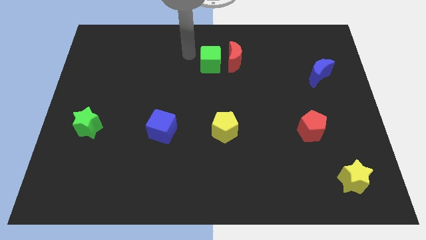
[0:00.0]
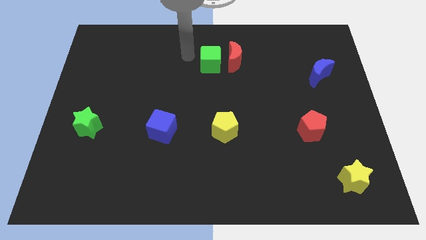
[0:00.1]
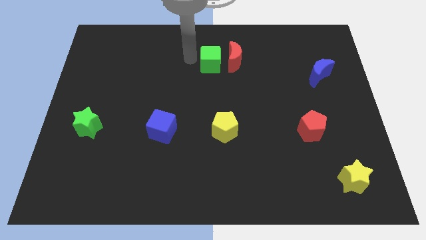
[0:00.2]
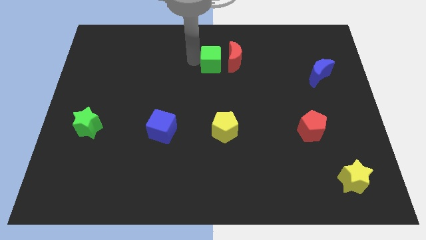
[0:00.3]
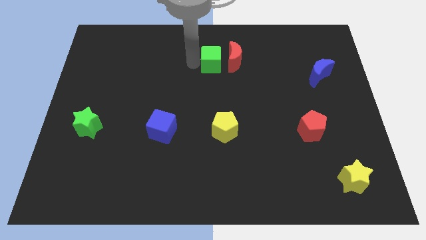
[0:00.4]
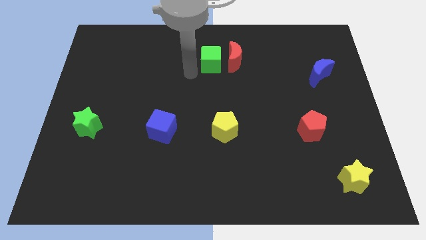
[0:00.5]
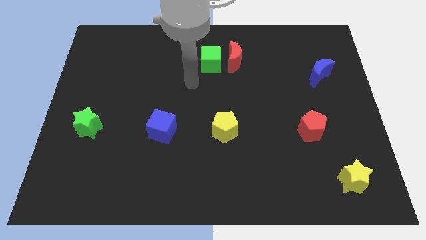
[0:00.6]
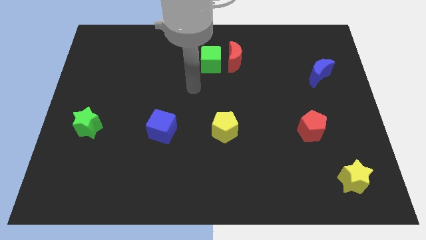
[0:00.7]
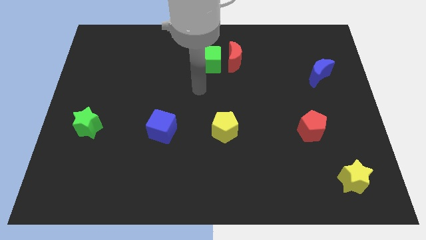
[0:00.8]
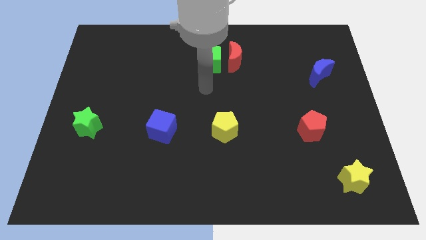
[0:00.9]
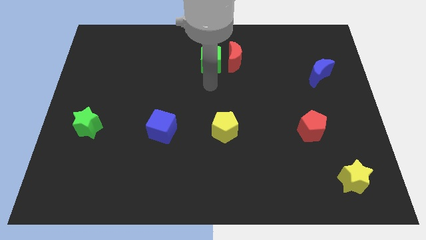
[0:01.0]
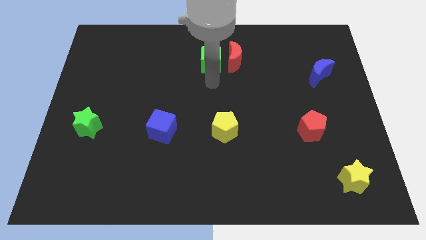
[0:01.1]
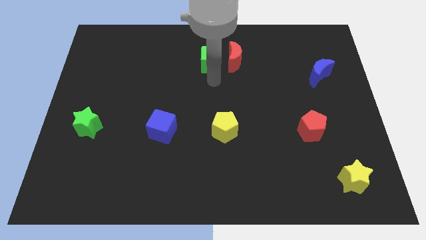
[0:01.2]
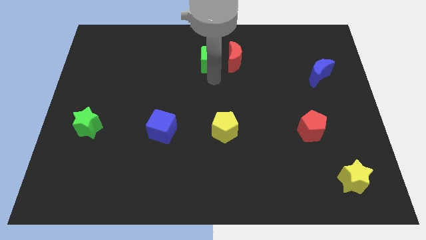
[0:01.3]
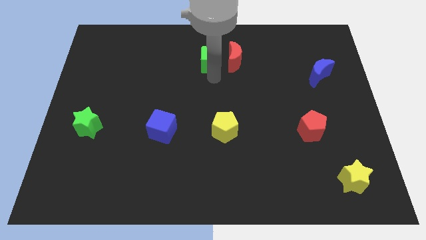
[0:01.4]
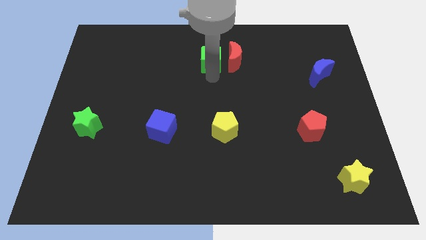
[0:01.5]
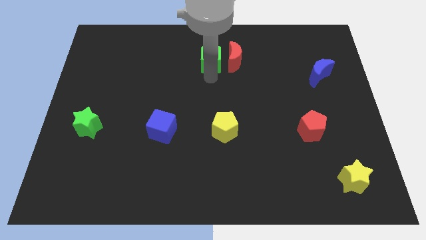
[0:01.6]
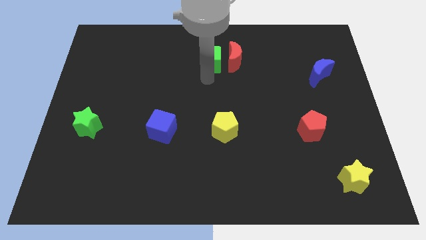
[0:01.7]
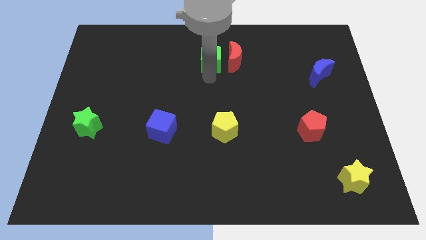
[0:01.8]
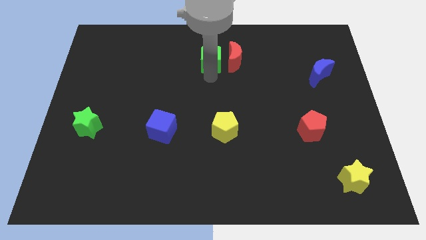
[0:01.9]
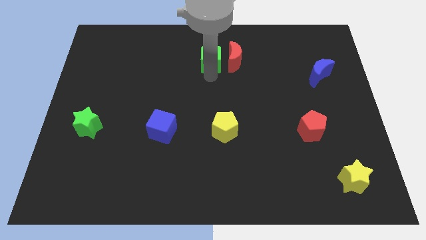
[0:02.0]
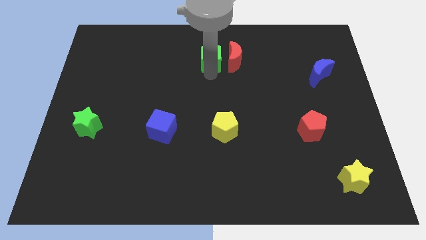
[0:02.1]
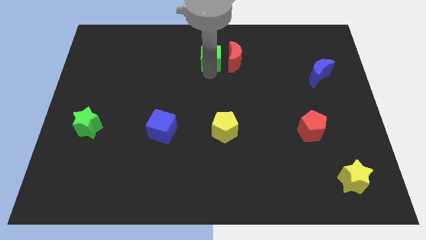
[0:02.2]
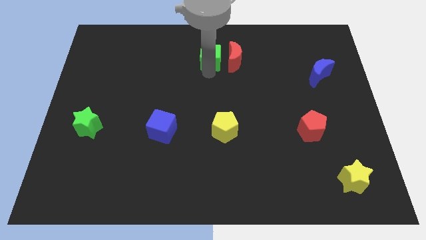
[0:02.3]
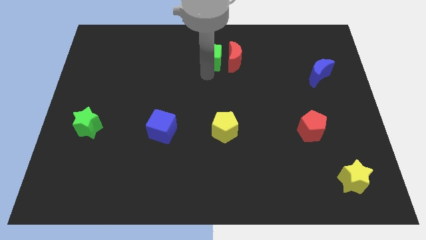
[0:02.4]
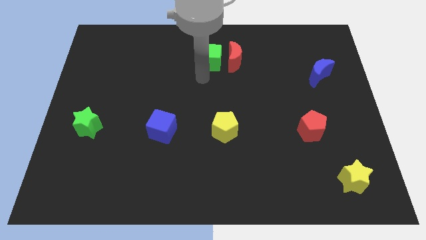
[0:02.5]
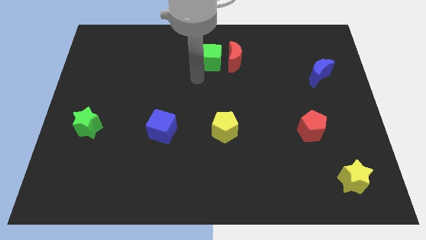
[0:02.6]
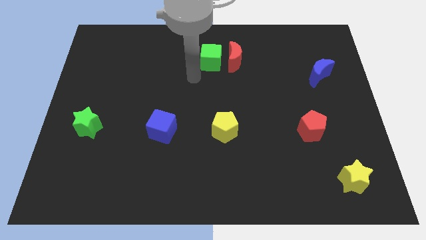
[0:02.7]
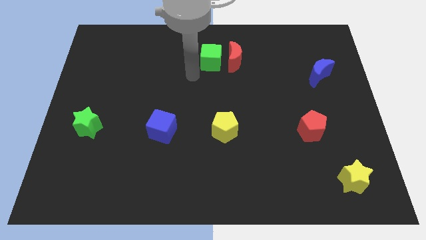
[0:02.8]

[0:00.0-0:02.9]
slightly move the green cube up

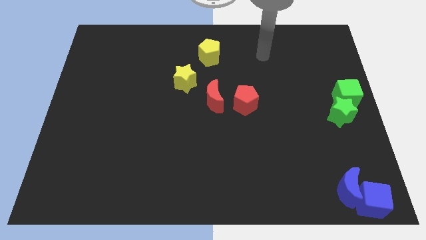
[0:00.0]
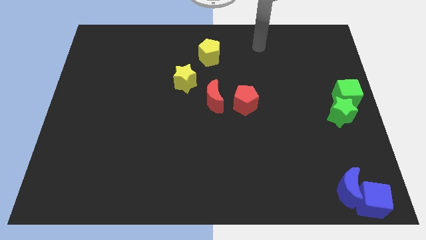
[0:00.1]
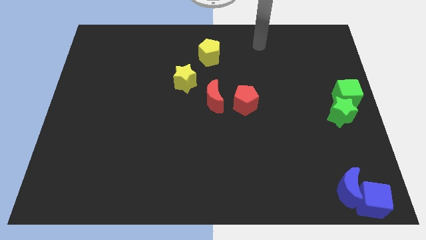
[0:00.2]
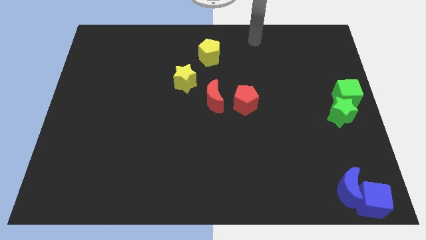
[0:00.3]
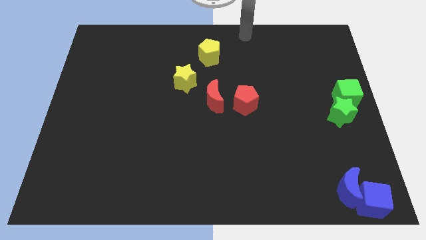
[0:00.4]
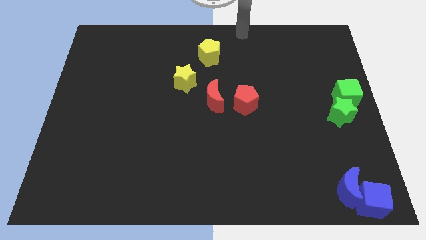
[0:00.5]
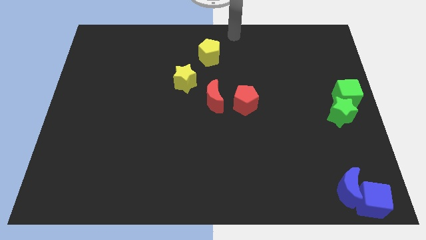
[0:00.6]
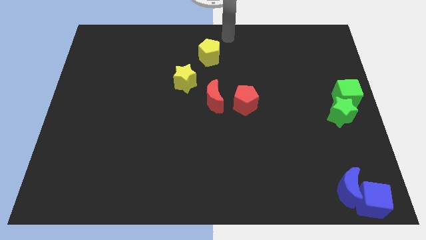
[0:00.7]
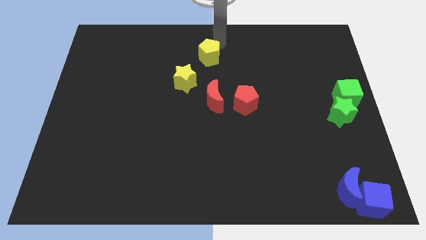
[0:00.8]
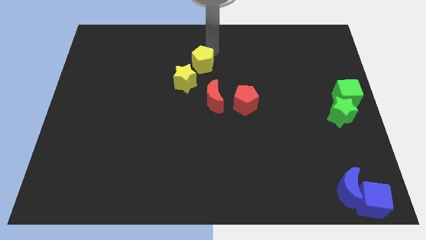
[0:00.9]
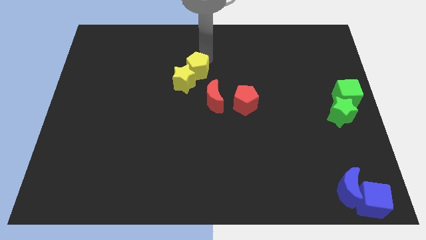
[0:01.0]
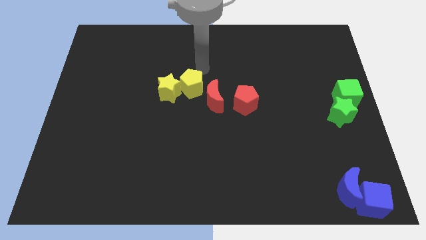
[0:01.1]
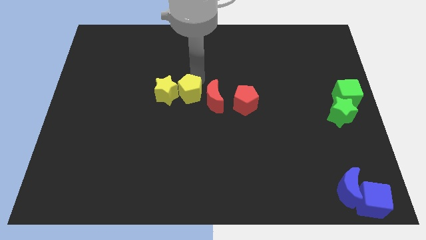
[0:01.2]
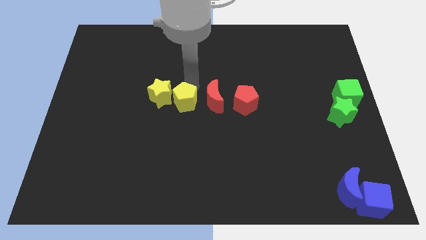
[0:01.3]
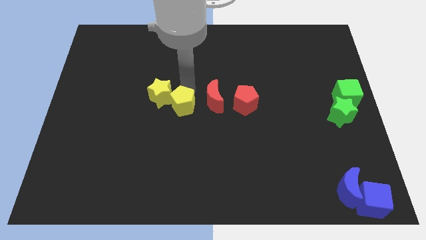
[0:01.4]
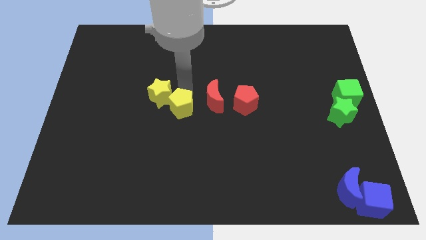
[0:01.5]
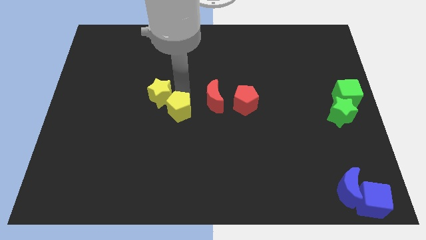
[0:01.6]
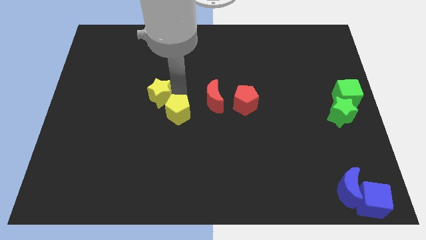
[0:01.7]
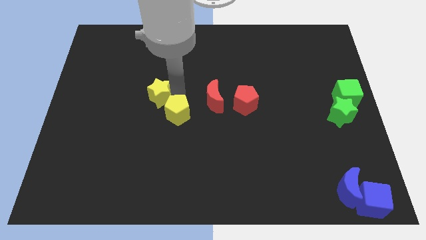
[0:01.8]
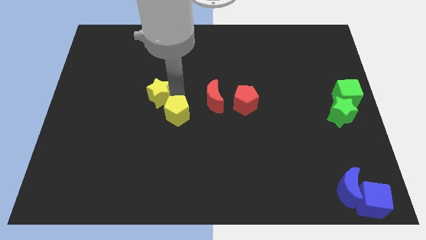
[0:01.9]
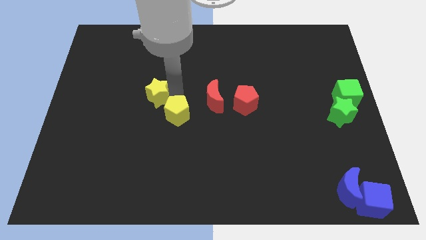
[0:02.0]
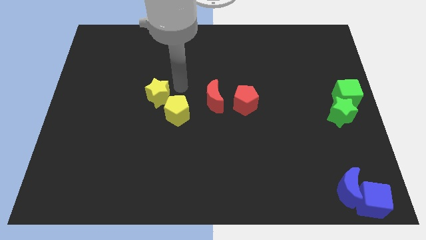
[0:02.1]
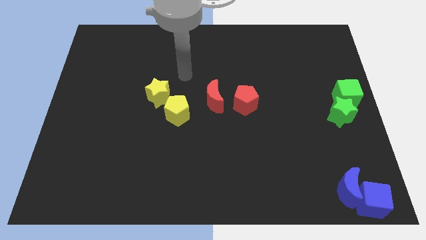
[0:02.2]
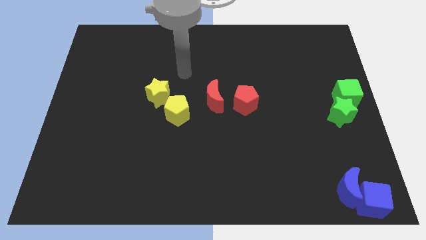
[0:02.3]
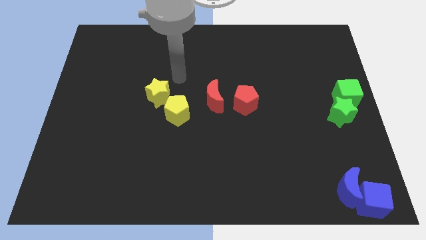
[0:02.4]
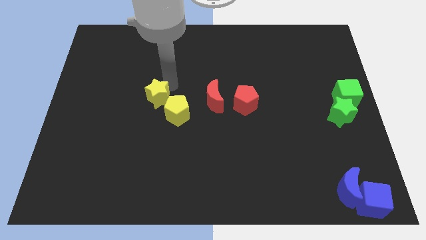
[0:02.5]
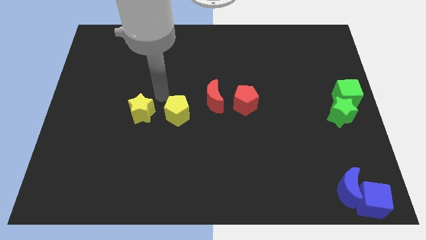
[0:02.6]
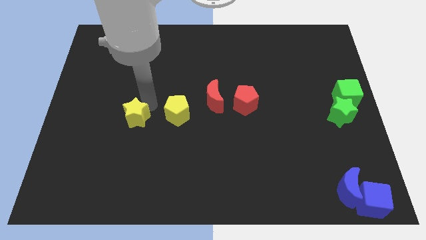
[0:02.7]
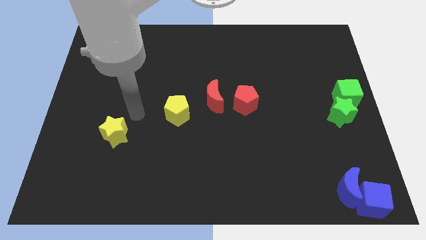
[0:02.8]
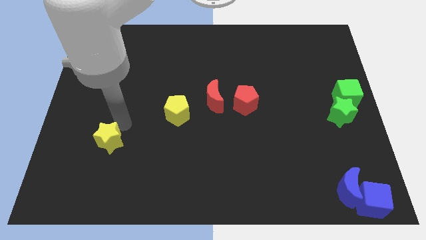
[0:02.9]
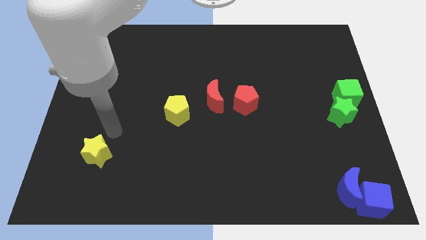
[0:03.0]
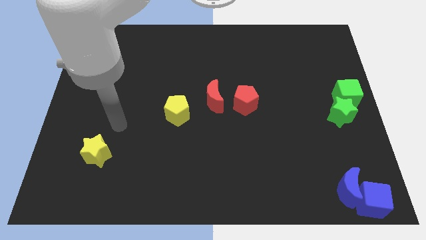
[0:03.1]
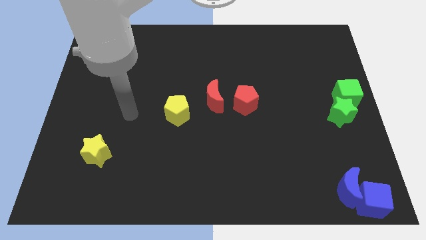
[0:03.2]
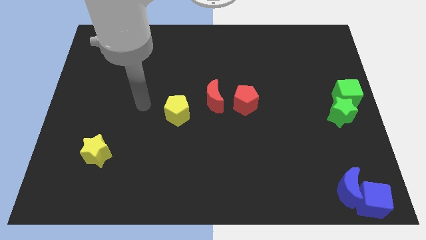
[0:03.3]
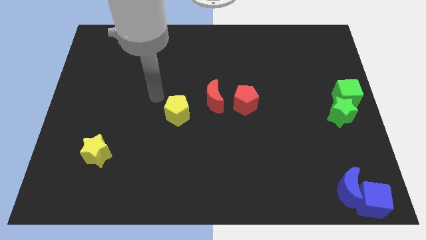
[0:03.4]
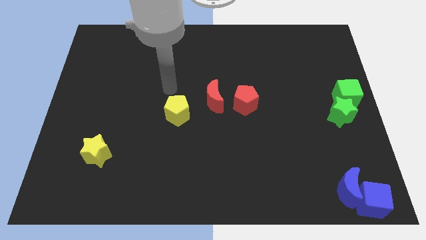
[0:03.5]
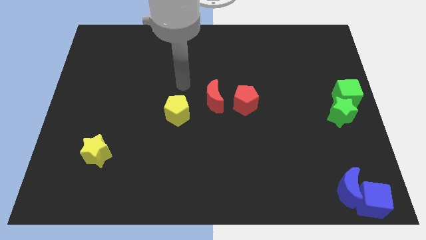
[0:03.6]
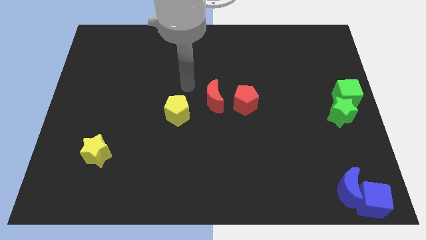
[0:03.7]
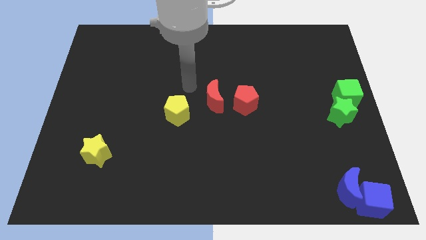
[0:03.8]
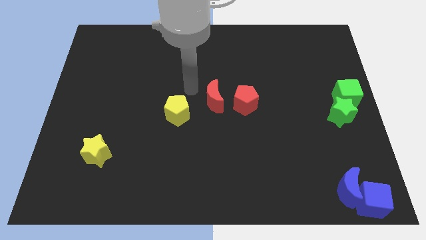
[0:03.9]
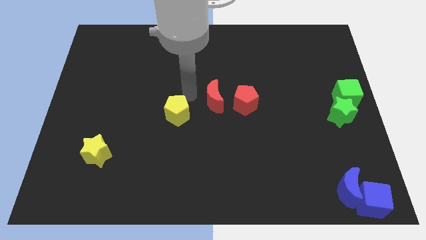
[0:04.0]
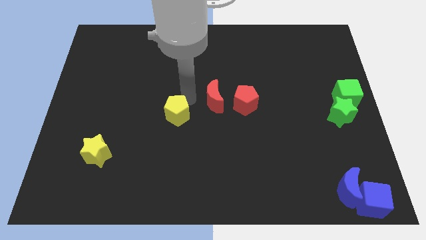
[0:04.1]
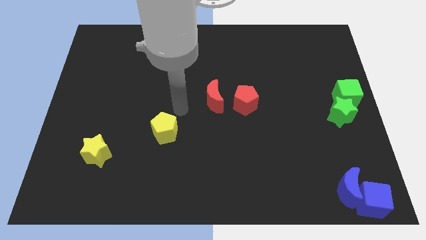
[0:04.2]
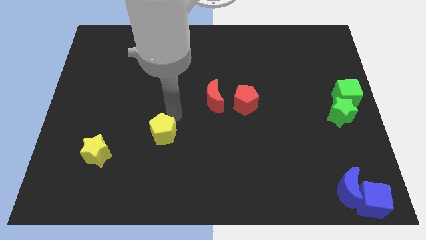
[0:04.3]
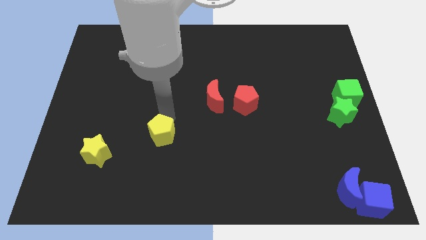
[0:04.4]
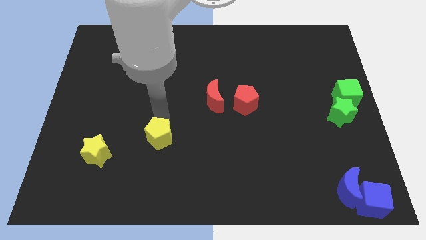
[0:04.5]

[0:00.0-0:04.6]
push the yellow blocks to the bottom of the board

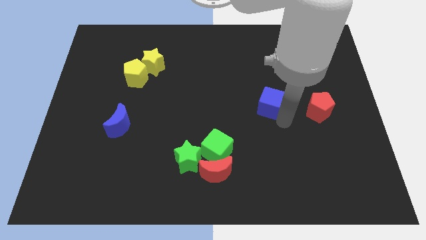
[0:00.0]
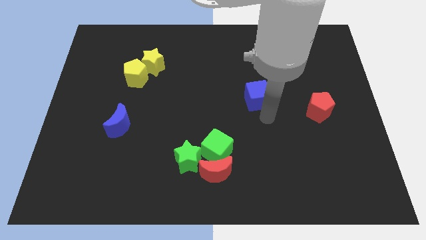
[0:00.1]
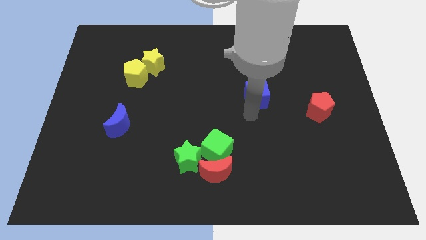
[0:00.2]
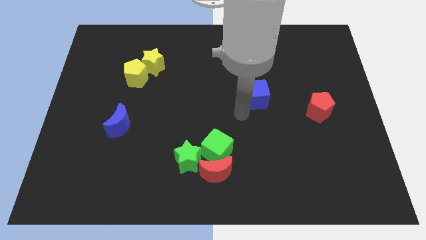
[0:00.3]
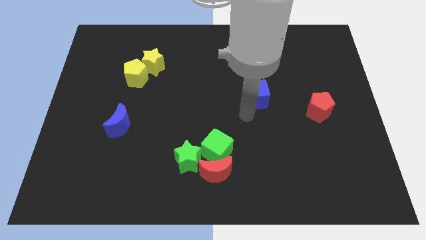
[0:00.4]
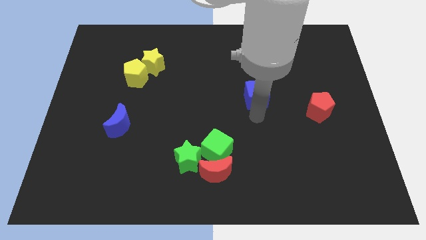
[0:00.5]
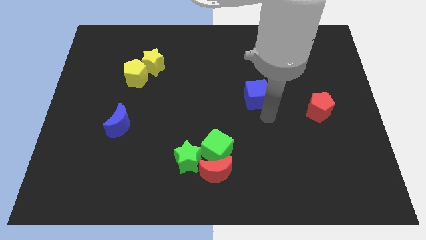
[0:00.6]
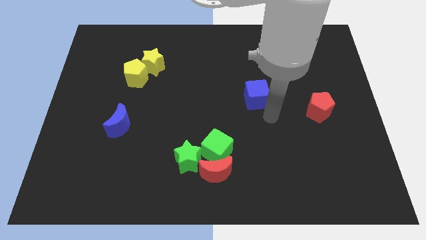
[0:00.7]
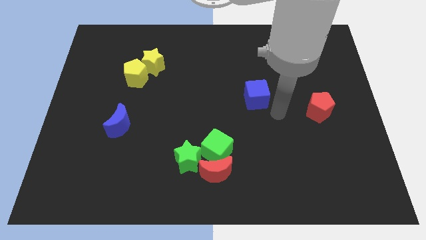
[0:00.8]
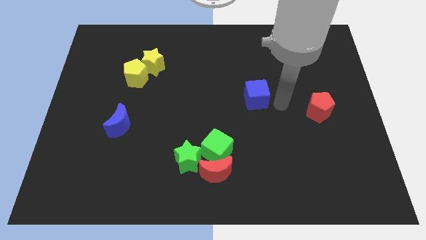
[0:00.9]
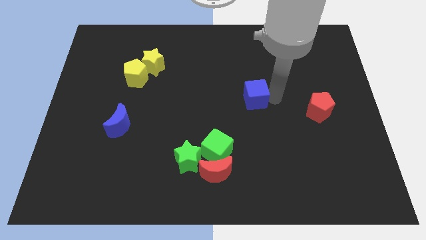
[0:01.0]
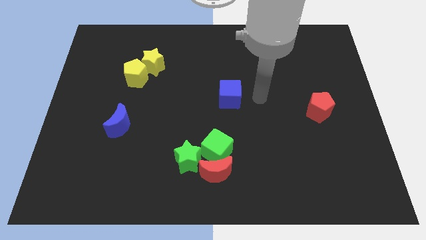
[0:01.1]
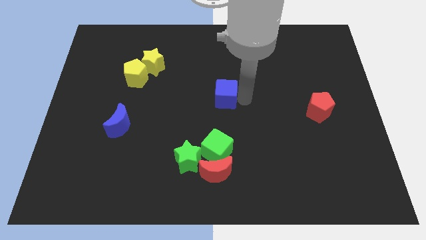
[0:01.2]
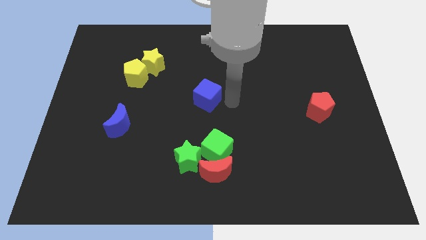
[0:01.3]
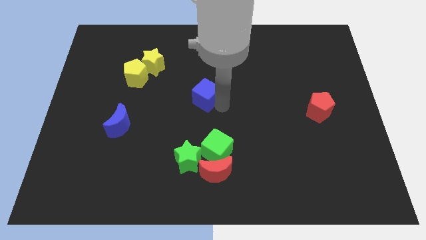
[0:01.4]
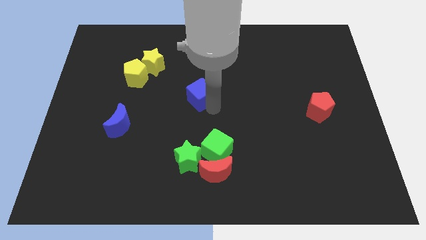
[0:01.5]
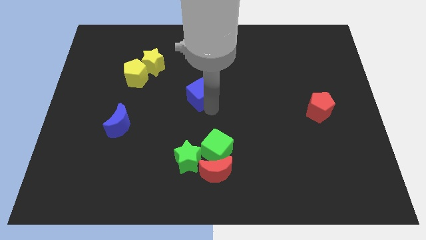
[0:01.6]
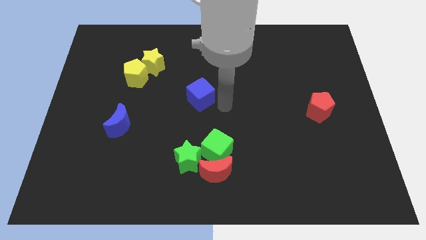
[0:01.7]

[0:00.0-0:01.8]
place the blue cube at the center of the board
